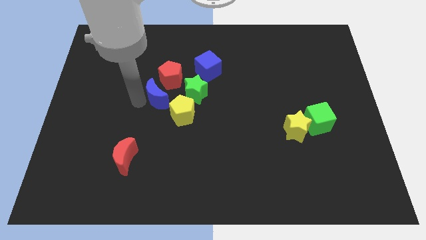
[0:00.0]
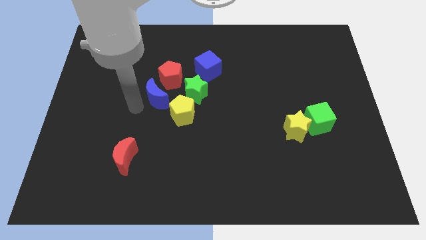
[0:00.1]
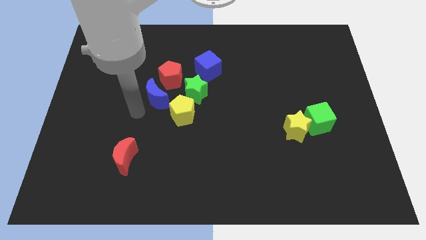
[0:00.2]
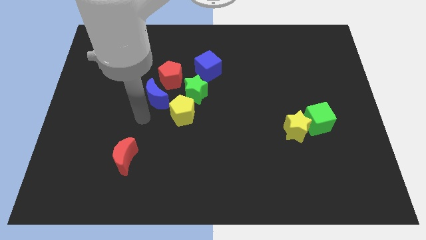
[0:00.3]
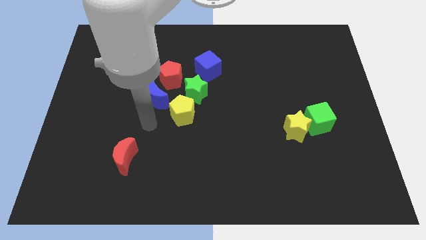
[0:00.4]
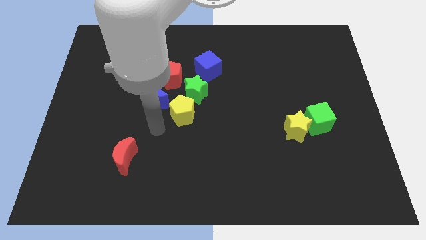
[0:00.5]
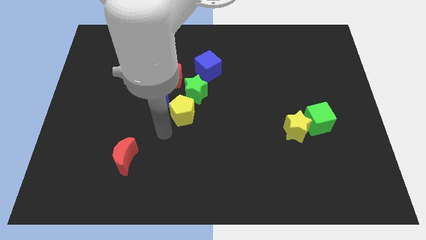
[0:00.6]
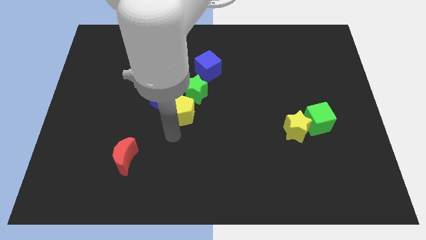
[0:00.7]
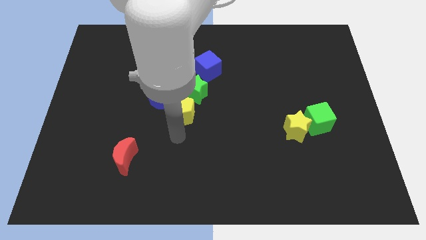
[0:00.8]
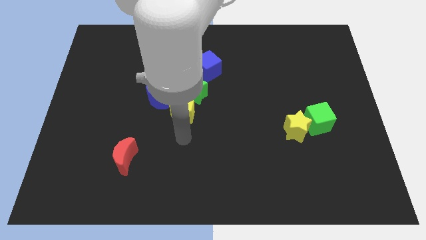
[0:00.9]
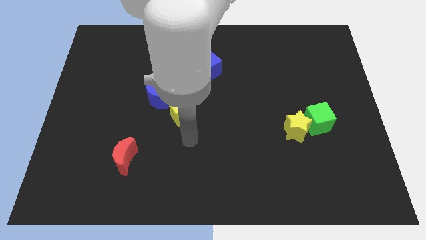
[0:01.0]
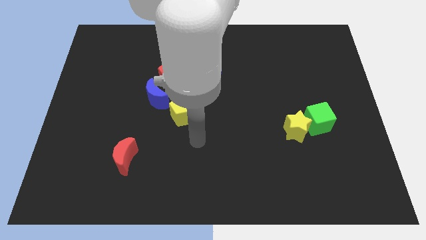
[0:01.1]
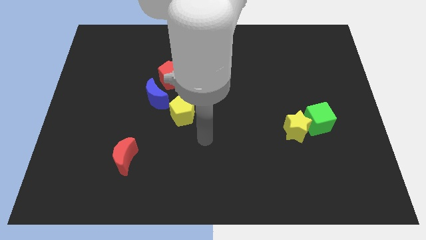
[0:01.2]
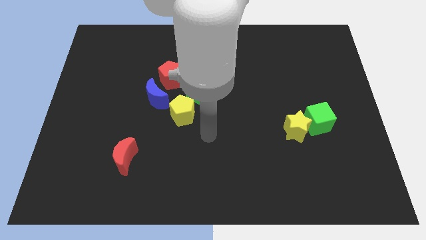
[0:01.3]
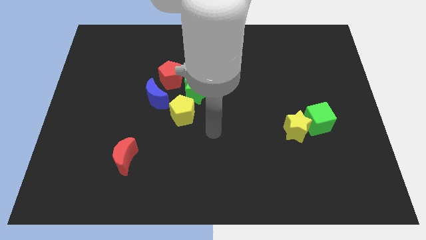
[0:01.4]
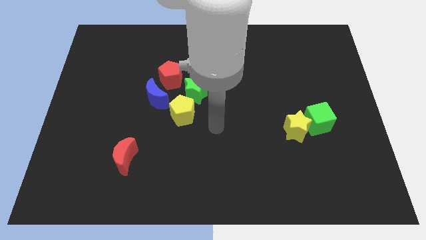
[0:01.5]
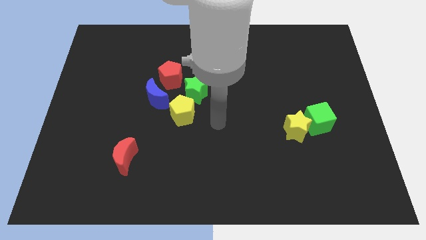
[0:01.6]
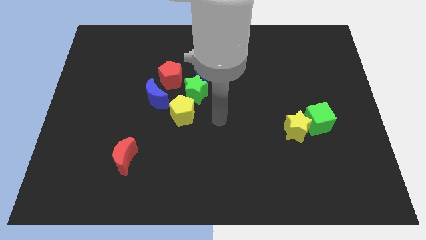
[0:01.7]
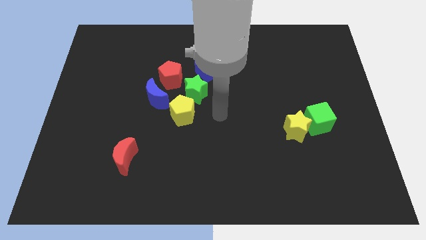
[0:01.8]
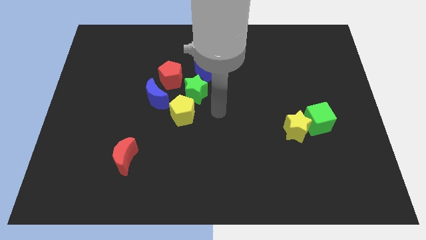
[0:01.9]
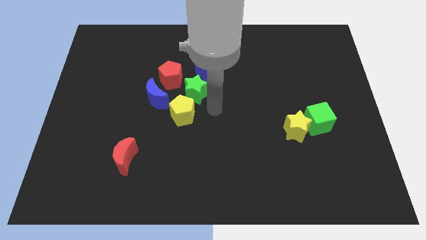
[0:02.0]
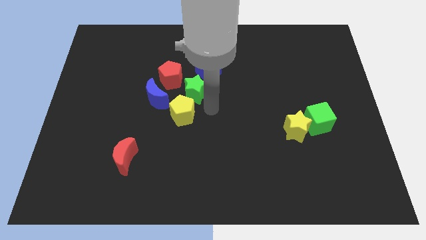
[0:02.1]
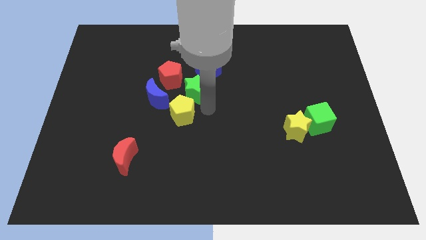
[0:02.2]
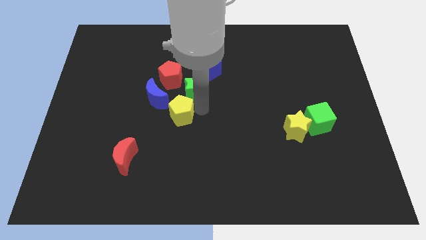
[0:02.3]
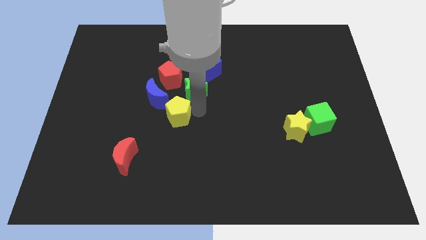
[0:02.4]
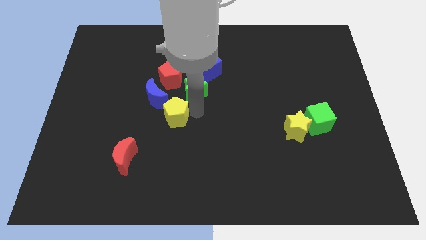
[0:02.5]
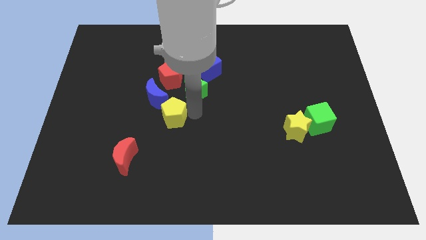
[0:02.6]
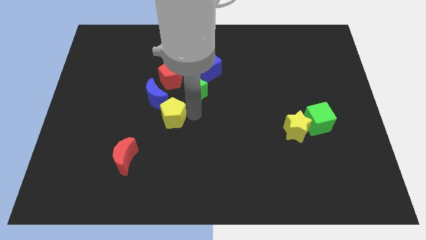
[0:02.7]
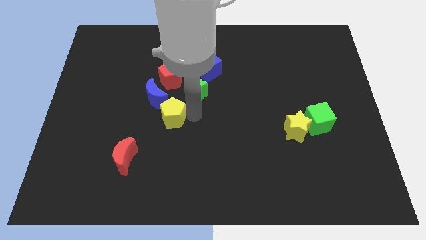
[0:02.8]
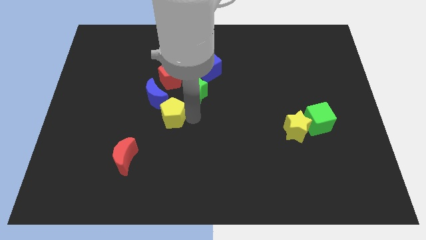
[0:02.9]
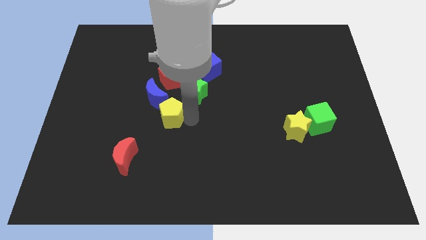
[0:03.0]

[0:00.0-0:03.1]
move the yellow pentagon close to the bottom right side of the blue moon

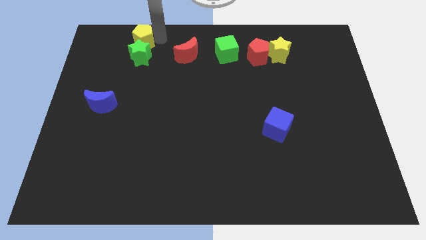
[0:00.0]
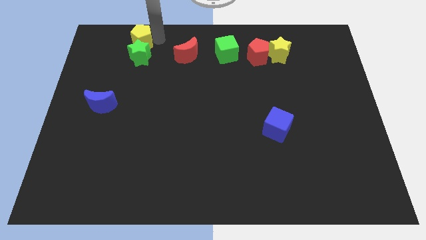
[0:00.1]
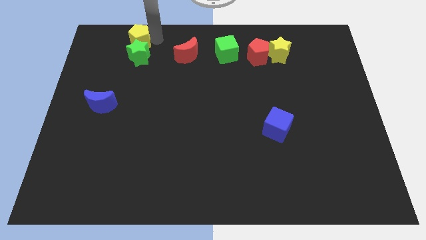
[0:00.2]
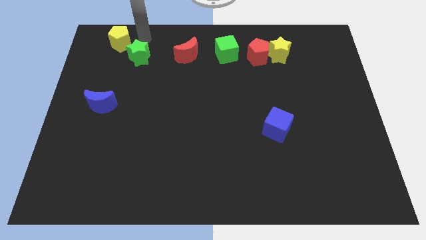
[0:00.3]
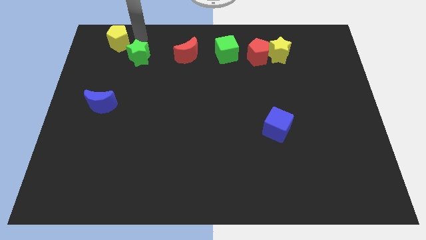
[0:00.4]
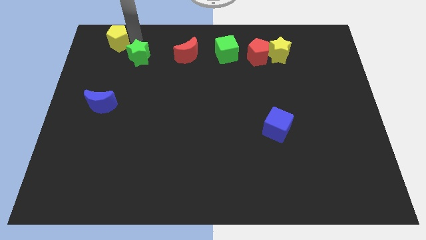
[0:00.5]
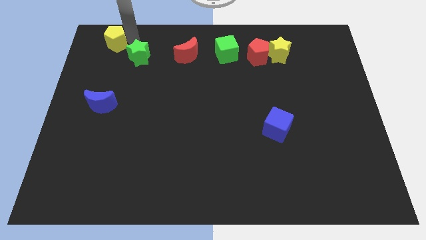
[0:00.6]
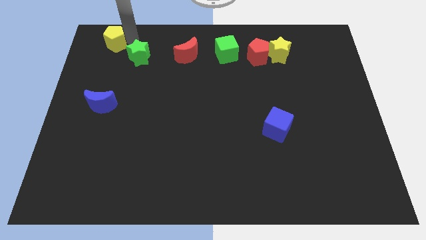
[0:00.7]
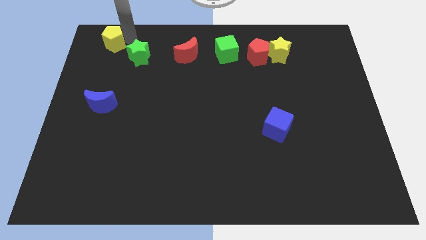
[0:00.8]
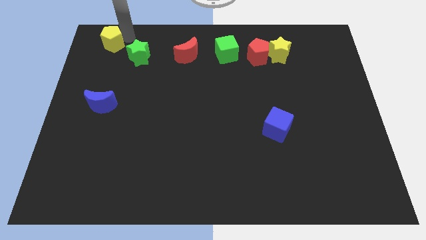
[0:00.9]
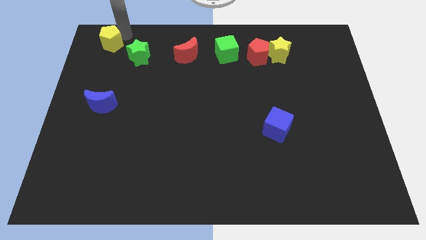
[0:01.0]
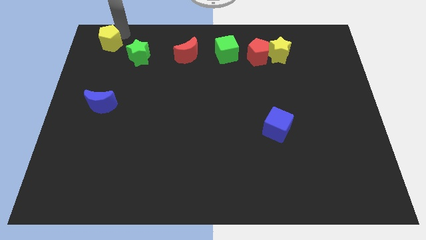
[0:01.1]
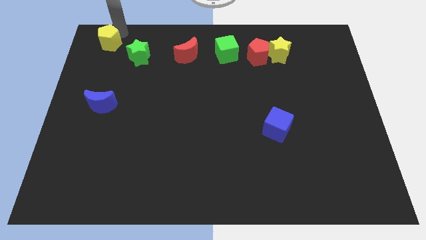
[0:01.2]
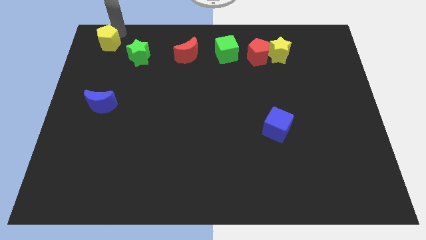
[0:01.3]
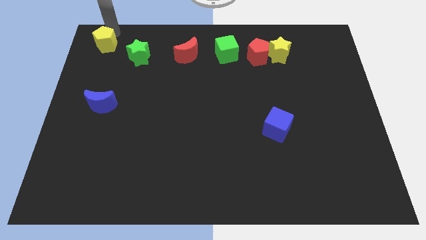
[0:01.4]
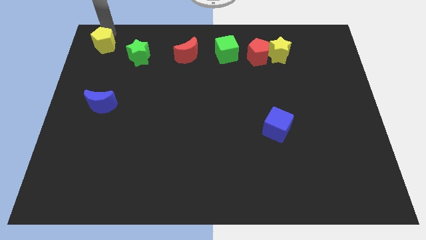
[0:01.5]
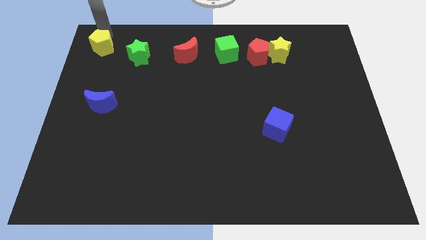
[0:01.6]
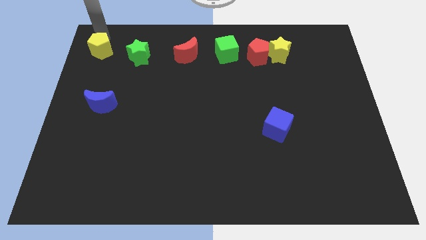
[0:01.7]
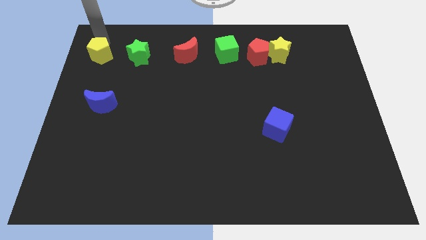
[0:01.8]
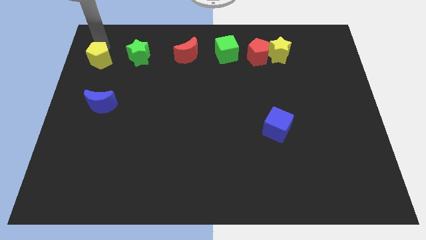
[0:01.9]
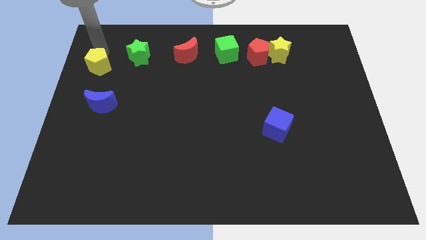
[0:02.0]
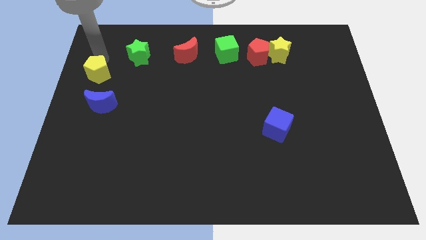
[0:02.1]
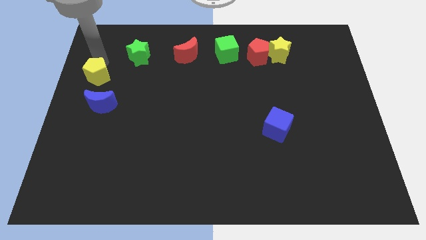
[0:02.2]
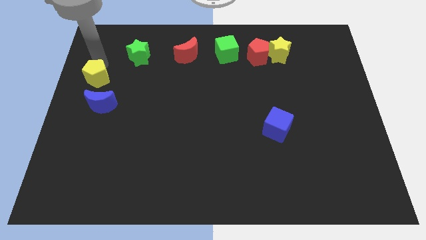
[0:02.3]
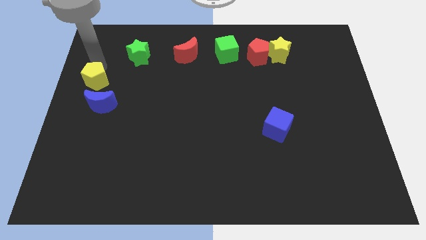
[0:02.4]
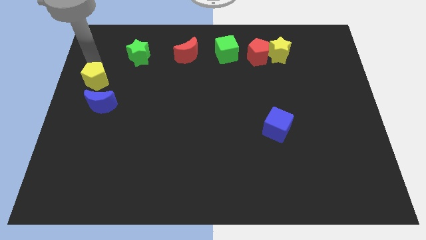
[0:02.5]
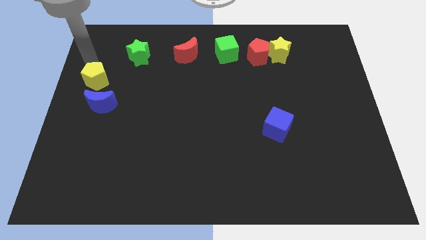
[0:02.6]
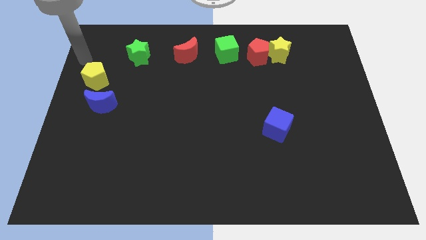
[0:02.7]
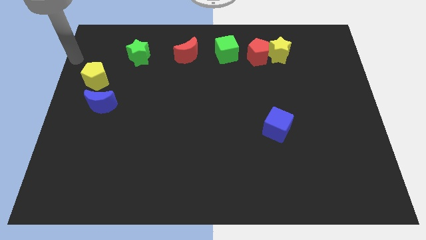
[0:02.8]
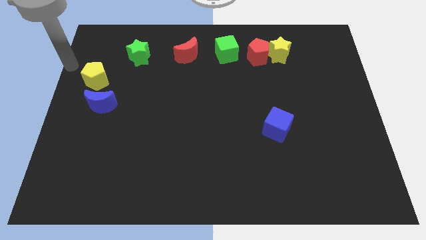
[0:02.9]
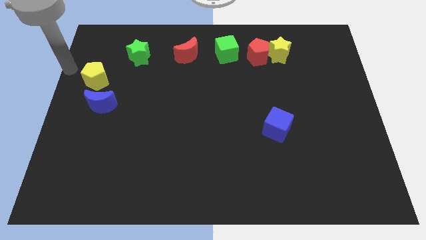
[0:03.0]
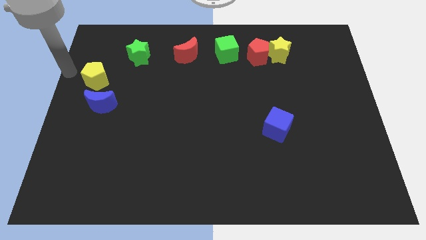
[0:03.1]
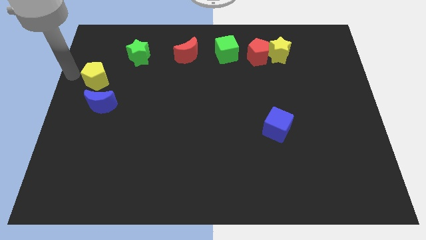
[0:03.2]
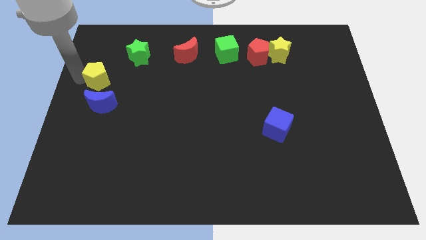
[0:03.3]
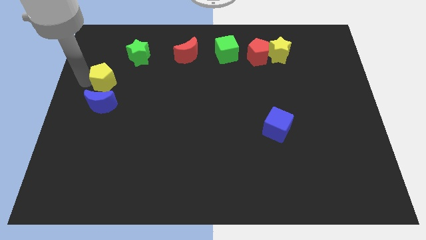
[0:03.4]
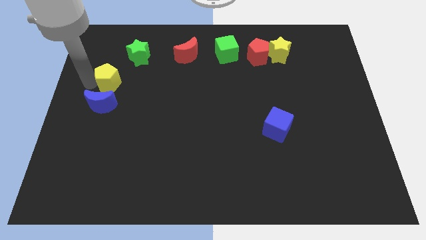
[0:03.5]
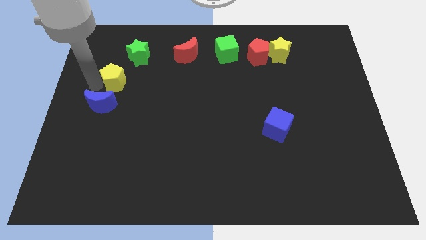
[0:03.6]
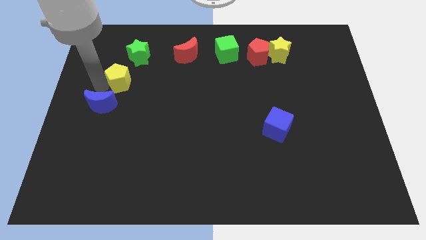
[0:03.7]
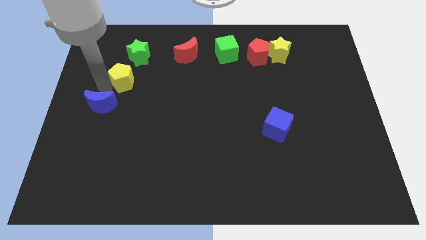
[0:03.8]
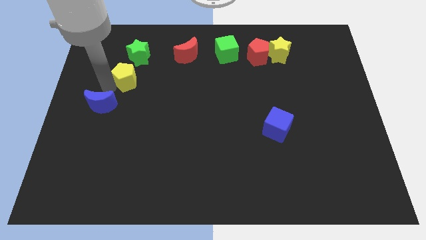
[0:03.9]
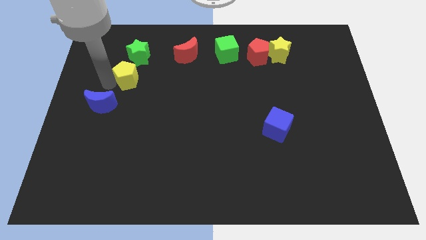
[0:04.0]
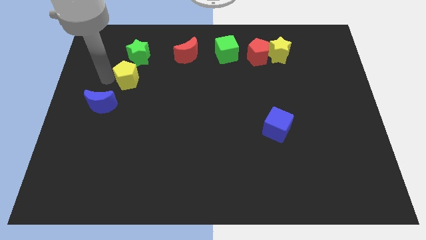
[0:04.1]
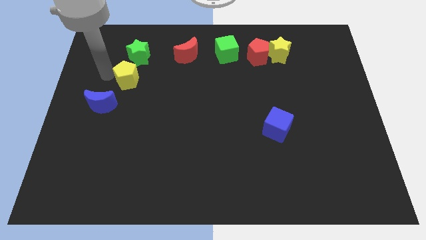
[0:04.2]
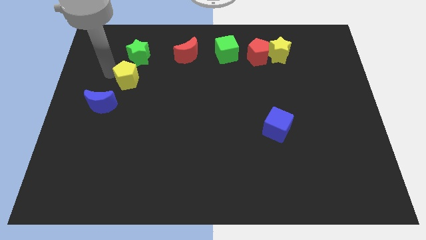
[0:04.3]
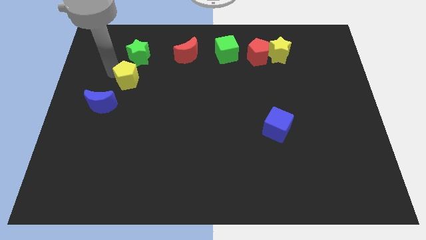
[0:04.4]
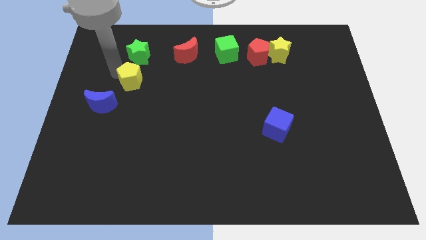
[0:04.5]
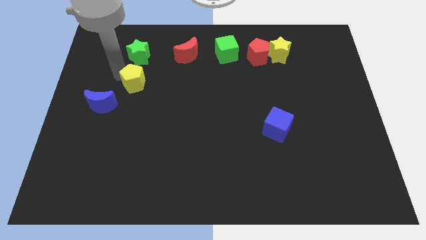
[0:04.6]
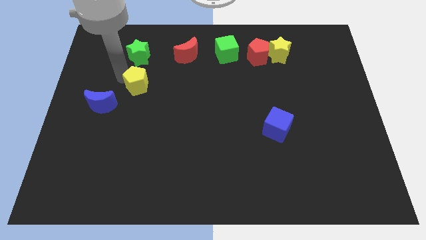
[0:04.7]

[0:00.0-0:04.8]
place the yellow pentagon below the green star

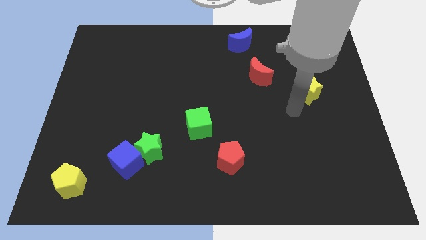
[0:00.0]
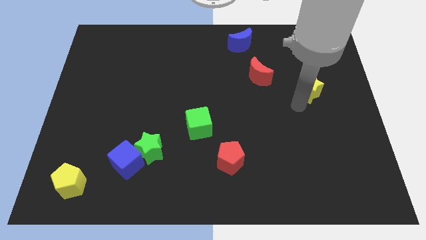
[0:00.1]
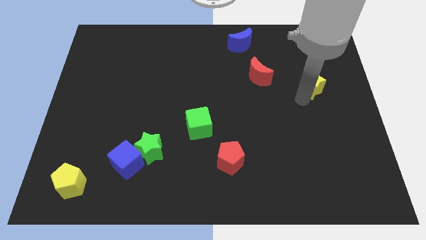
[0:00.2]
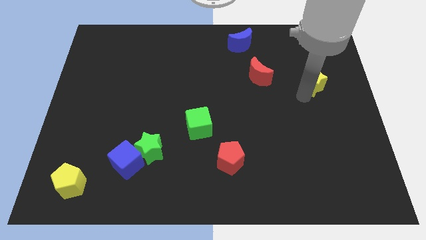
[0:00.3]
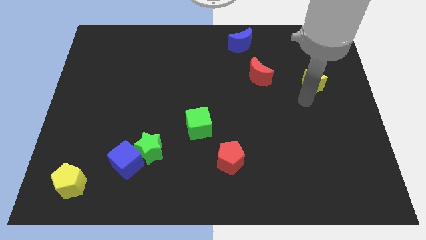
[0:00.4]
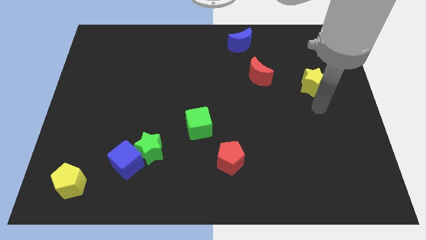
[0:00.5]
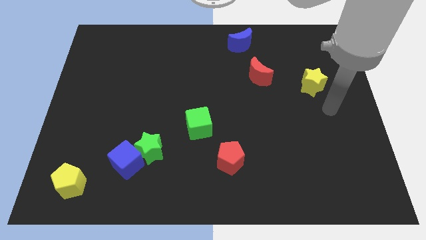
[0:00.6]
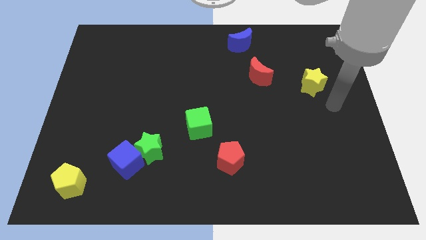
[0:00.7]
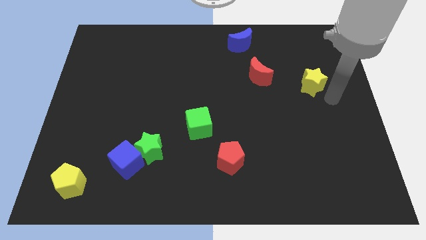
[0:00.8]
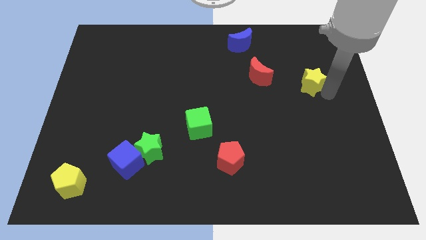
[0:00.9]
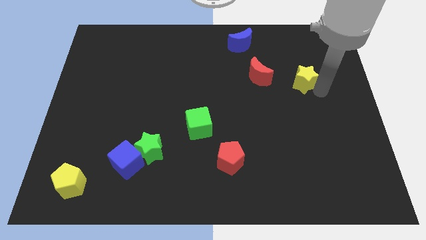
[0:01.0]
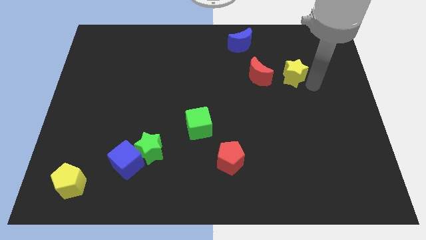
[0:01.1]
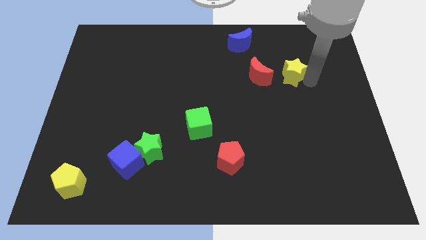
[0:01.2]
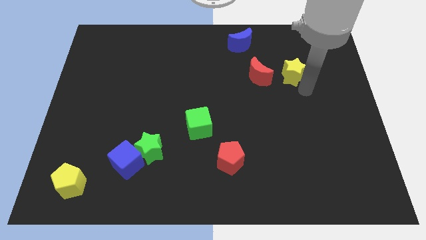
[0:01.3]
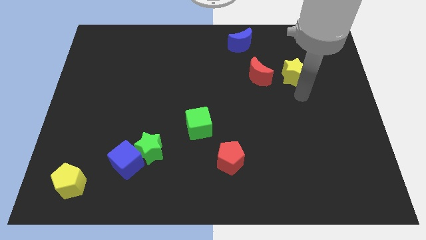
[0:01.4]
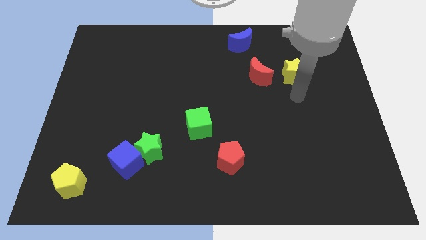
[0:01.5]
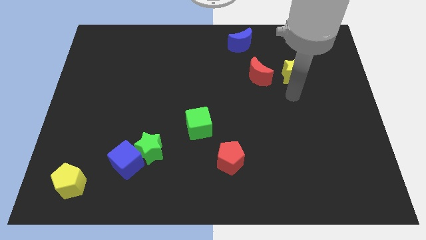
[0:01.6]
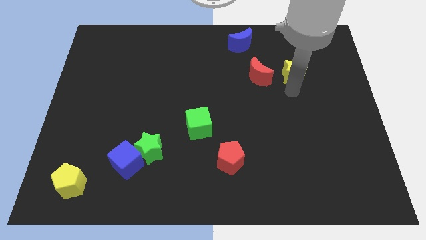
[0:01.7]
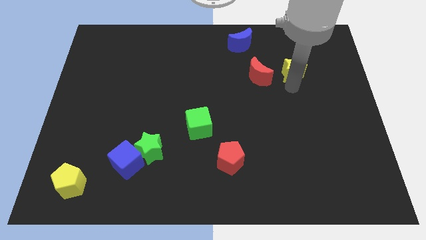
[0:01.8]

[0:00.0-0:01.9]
place the yellow star at right side of the red crescent
